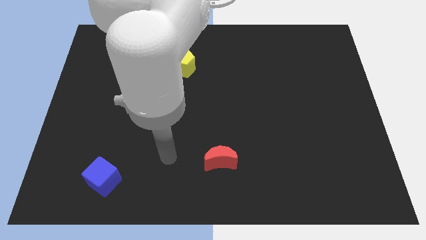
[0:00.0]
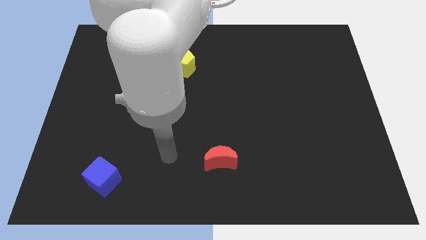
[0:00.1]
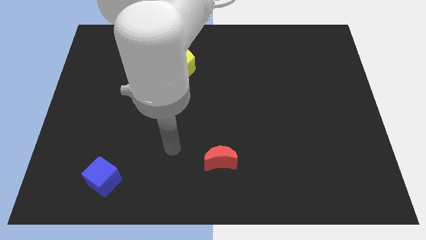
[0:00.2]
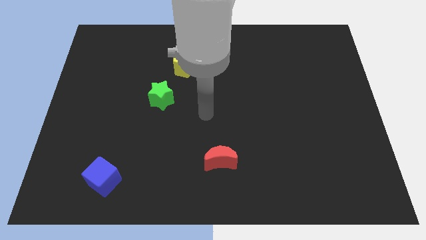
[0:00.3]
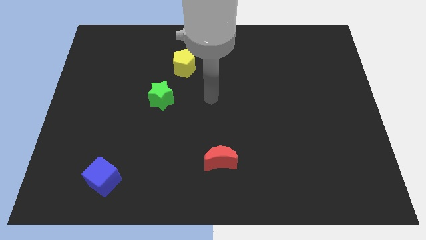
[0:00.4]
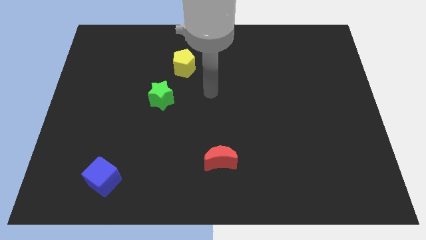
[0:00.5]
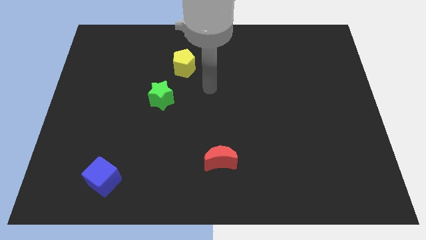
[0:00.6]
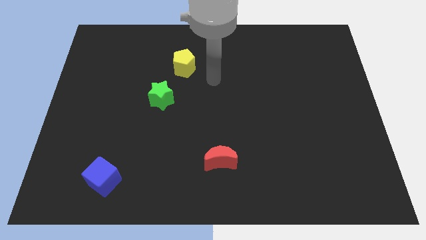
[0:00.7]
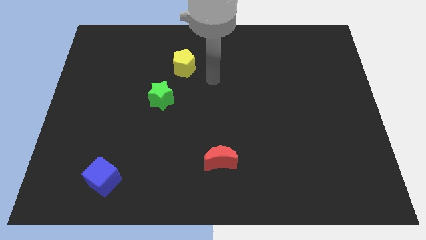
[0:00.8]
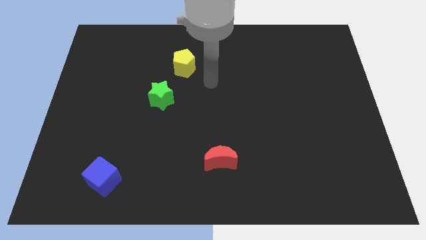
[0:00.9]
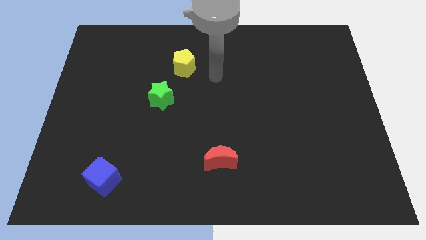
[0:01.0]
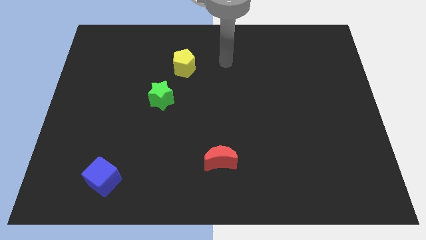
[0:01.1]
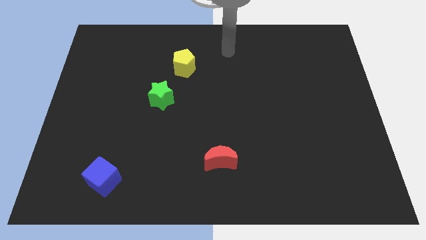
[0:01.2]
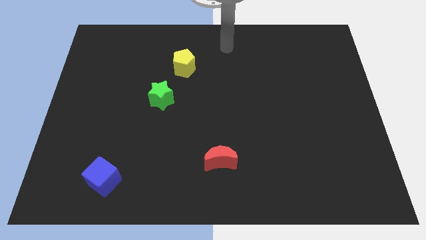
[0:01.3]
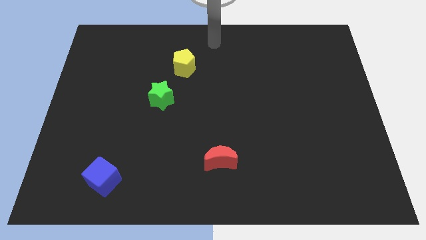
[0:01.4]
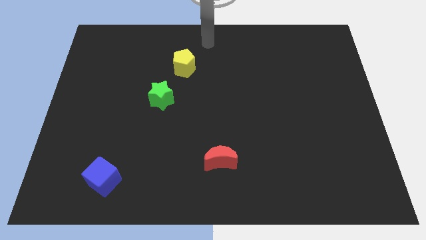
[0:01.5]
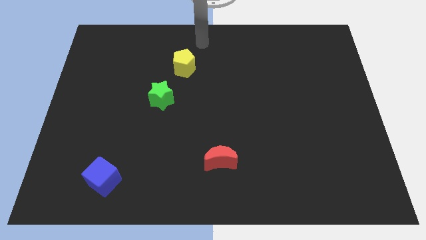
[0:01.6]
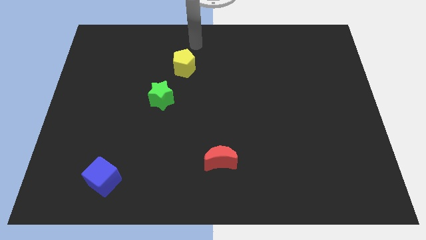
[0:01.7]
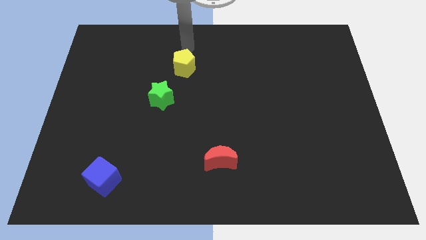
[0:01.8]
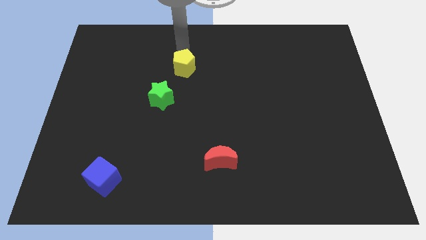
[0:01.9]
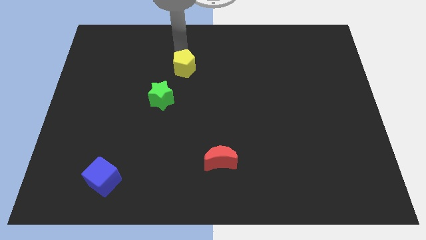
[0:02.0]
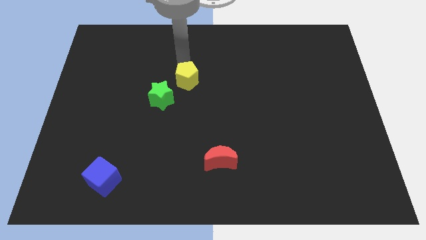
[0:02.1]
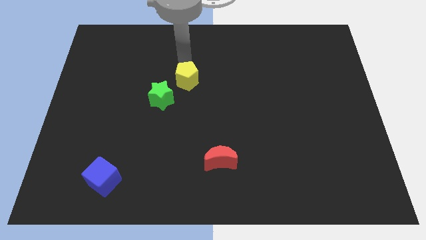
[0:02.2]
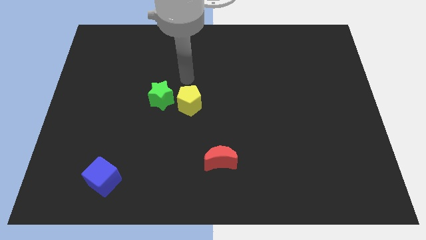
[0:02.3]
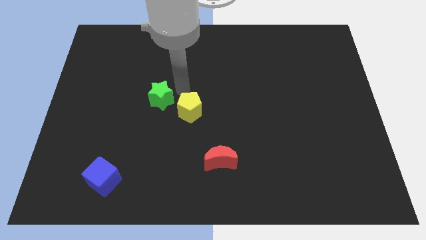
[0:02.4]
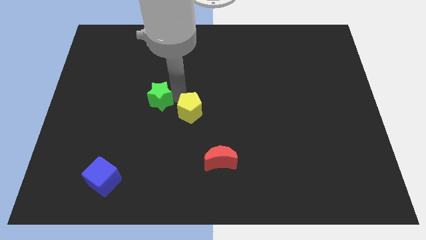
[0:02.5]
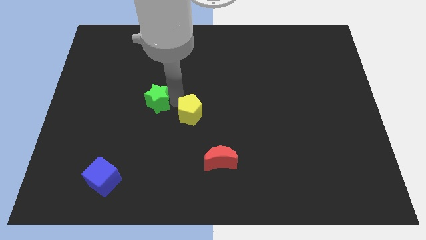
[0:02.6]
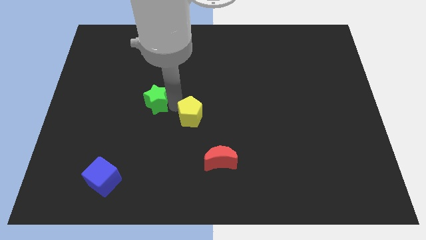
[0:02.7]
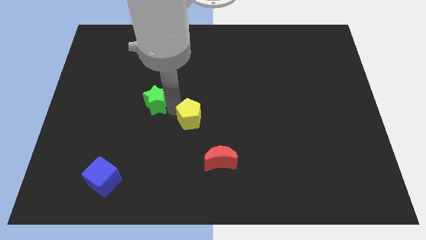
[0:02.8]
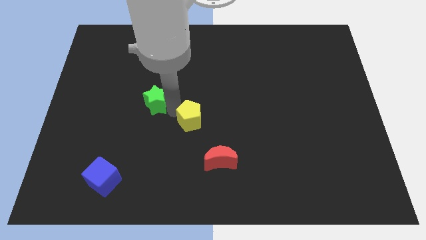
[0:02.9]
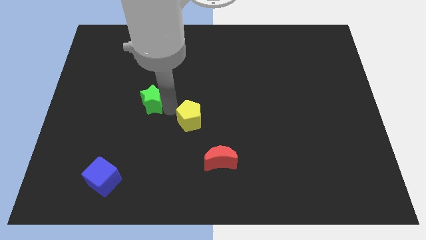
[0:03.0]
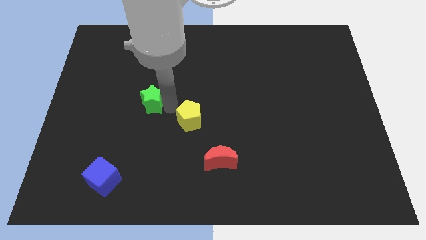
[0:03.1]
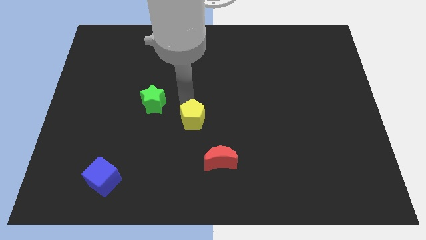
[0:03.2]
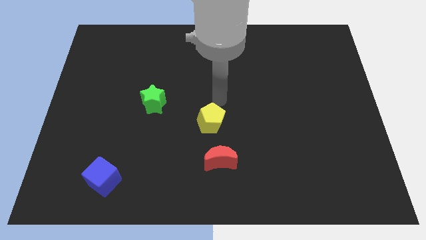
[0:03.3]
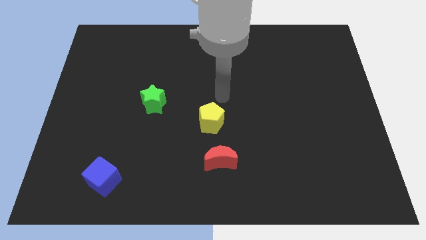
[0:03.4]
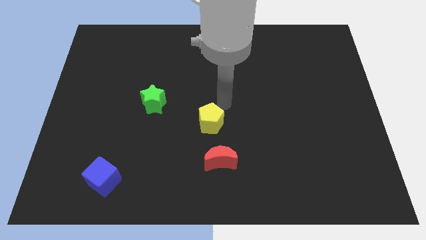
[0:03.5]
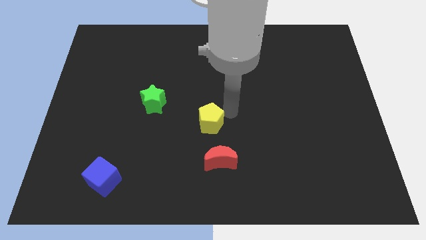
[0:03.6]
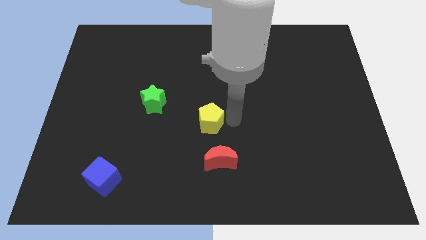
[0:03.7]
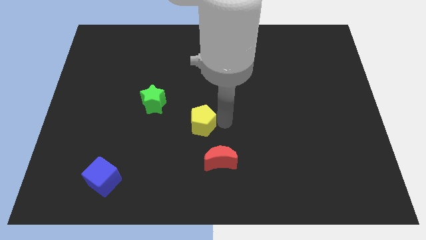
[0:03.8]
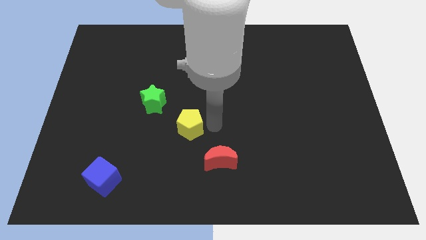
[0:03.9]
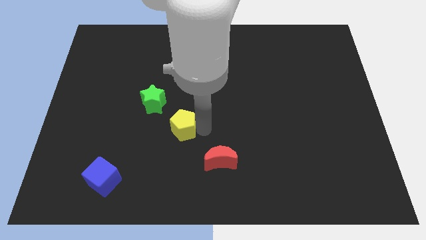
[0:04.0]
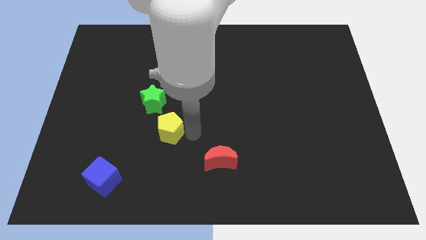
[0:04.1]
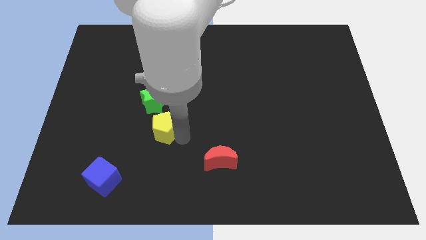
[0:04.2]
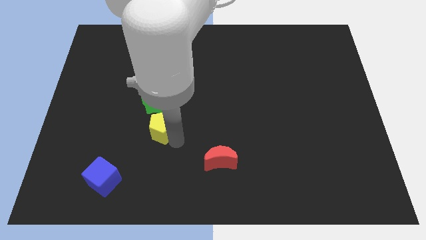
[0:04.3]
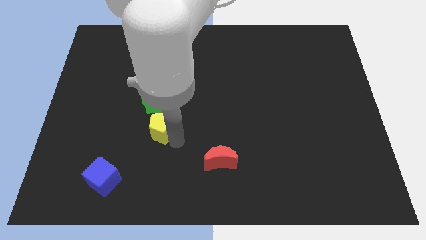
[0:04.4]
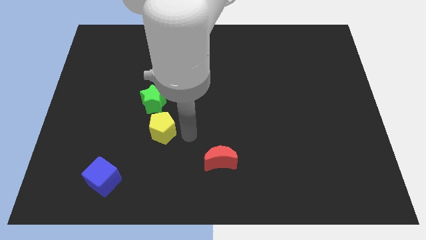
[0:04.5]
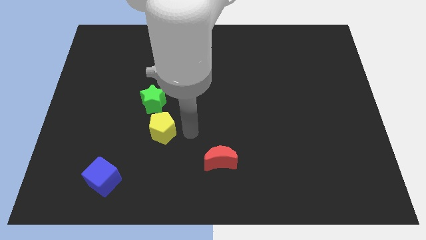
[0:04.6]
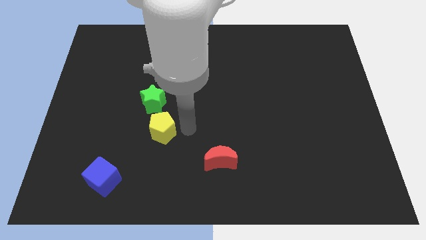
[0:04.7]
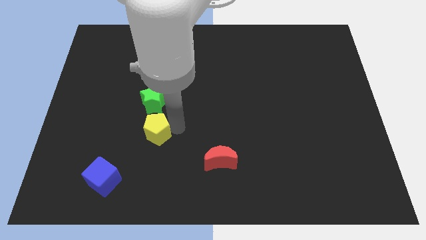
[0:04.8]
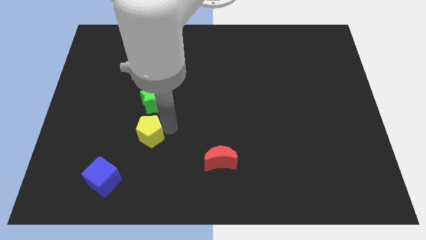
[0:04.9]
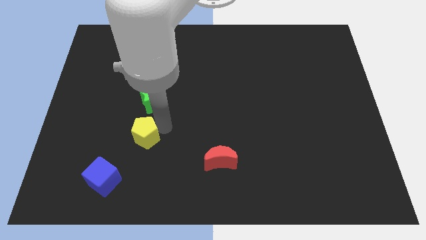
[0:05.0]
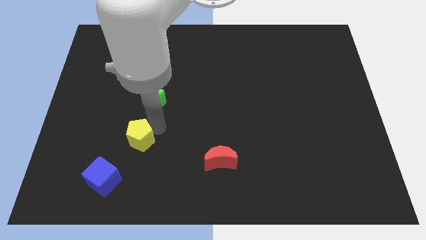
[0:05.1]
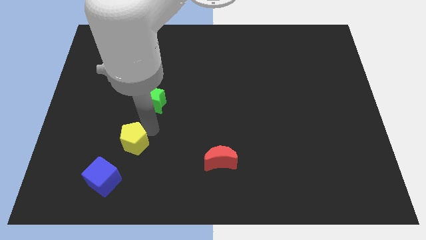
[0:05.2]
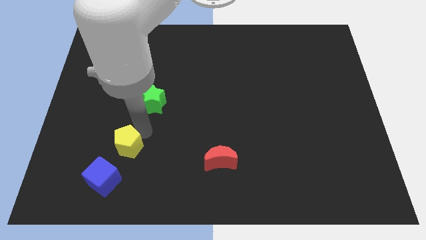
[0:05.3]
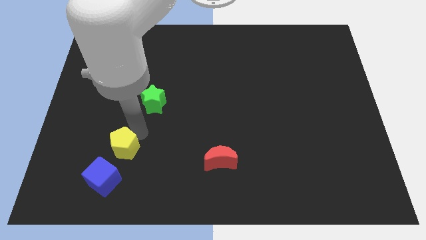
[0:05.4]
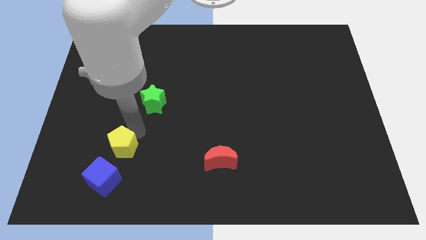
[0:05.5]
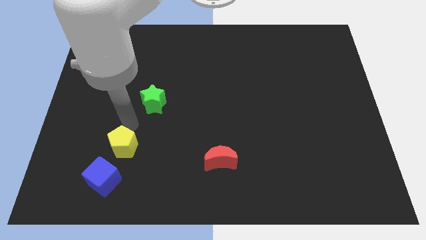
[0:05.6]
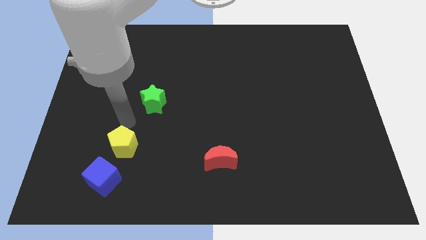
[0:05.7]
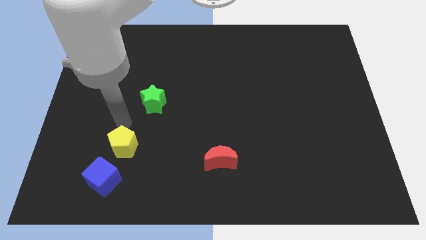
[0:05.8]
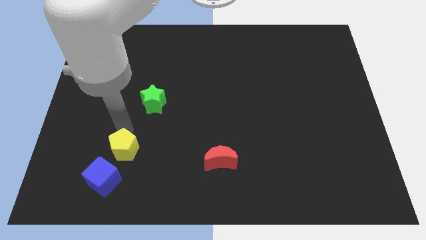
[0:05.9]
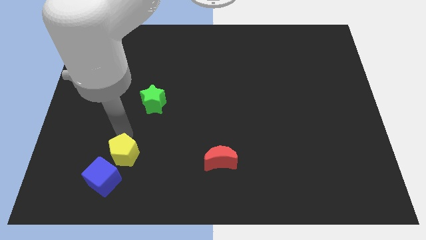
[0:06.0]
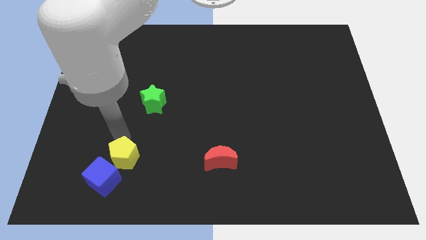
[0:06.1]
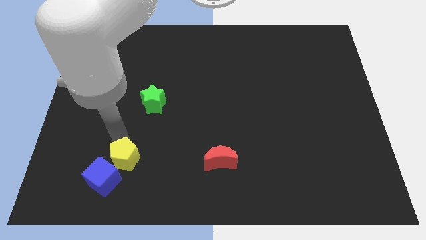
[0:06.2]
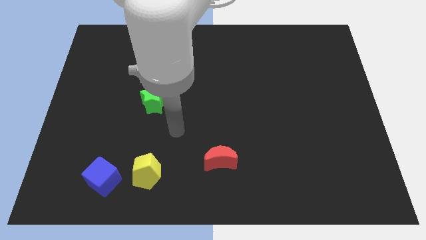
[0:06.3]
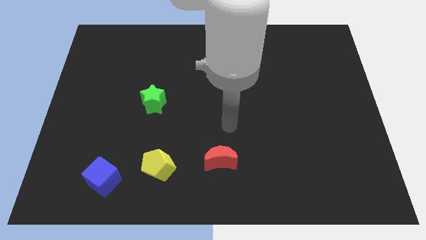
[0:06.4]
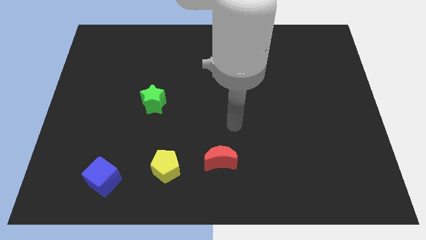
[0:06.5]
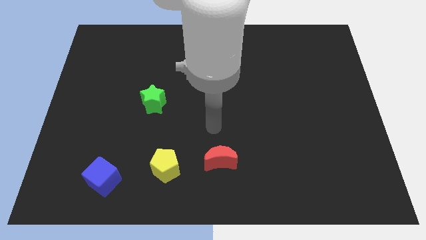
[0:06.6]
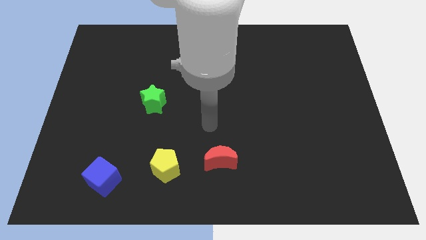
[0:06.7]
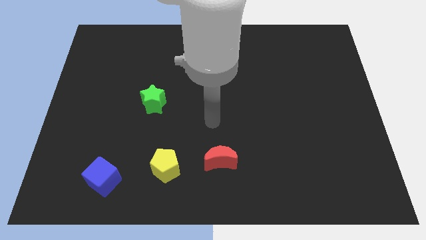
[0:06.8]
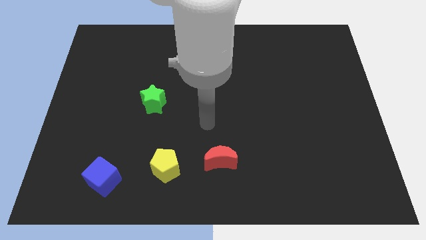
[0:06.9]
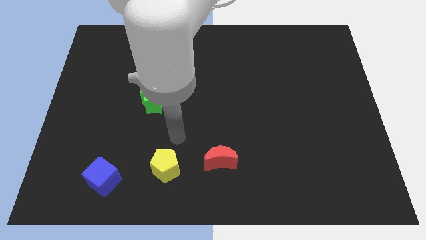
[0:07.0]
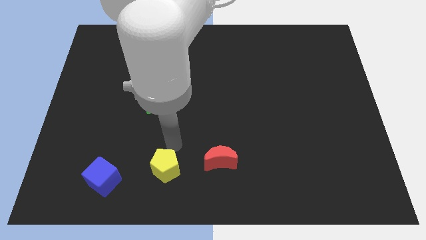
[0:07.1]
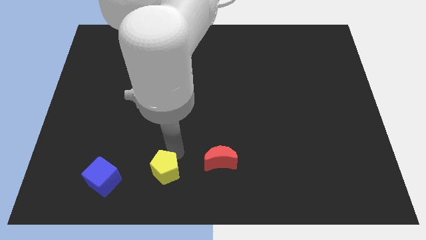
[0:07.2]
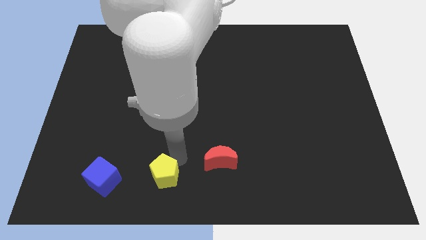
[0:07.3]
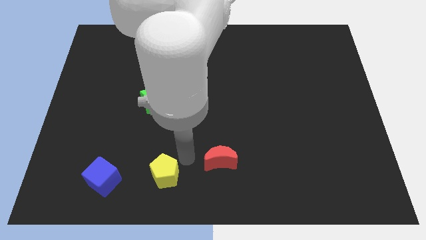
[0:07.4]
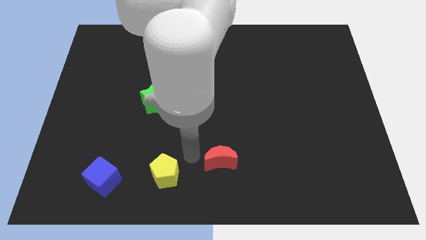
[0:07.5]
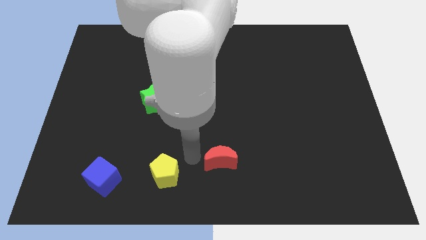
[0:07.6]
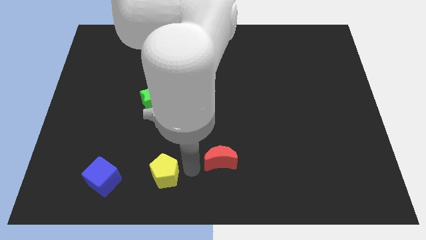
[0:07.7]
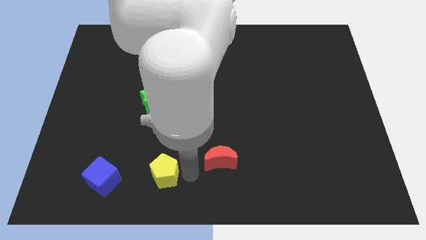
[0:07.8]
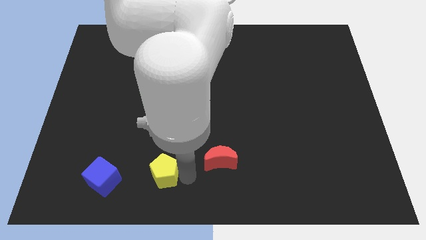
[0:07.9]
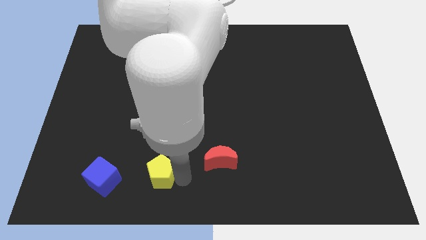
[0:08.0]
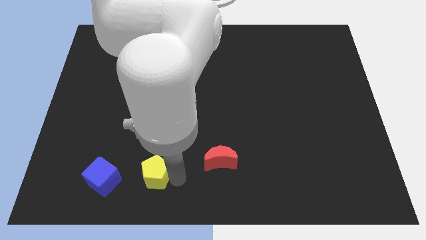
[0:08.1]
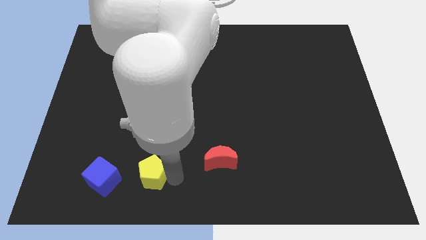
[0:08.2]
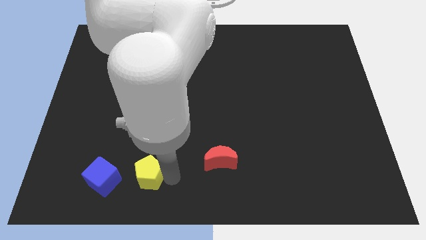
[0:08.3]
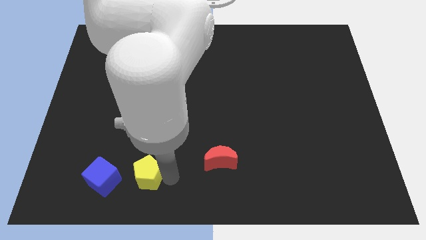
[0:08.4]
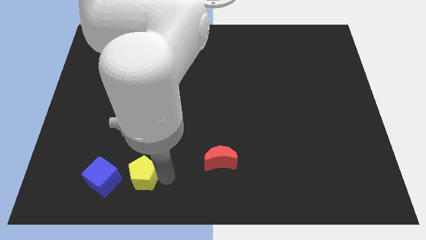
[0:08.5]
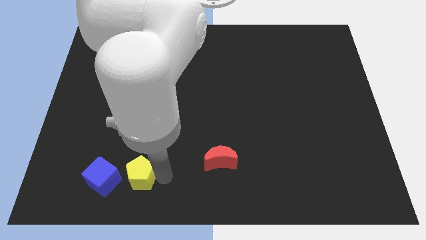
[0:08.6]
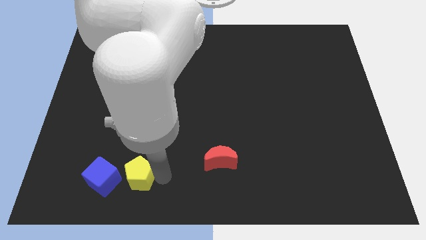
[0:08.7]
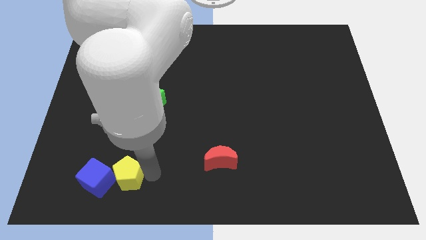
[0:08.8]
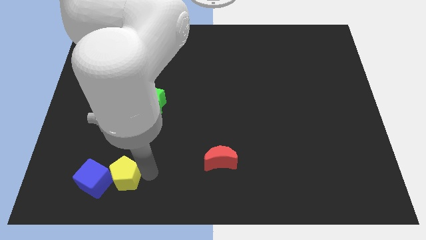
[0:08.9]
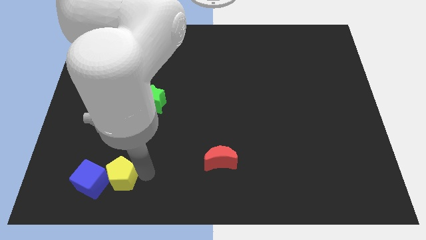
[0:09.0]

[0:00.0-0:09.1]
slide the yellow pentagon next to the blue block
